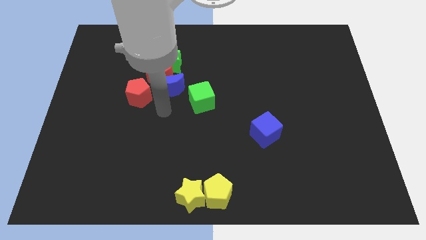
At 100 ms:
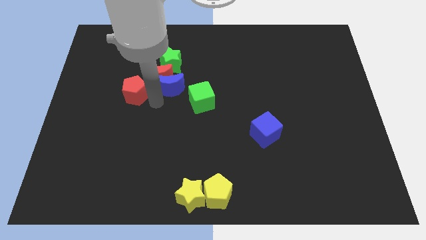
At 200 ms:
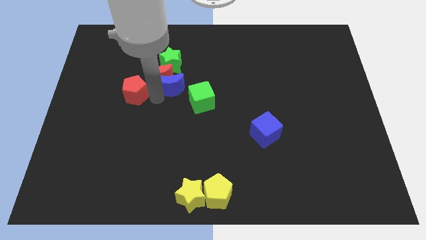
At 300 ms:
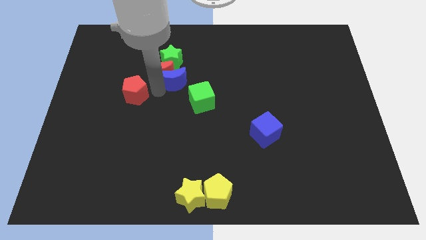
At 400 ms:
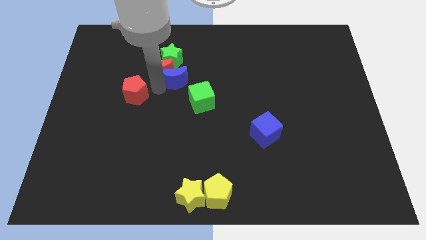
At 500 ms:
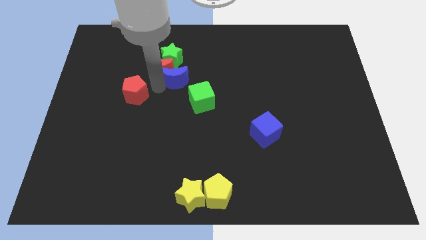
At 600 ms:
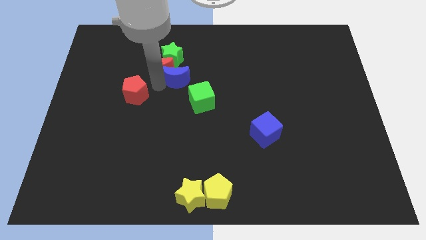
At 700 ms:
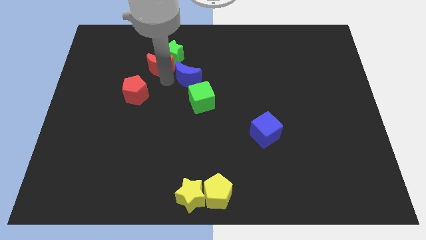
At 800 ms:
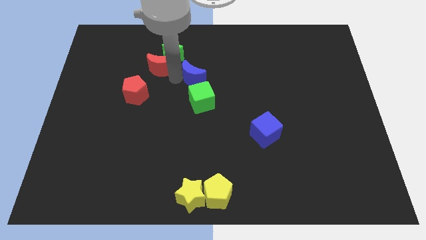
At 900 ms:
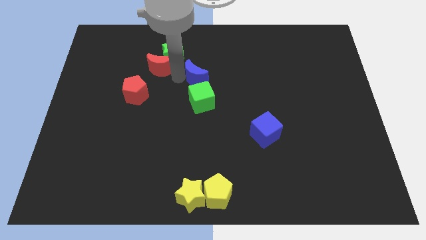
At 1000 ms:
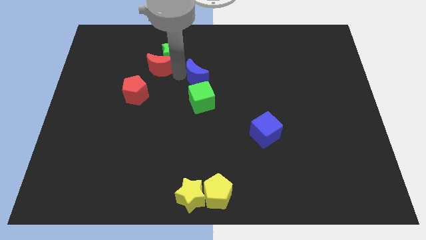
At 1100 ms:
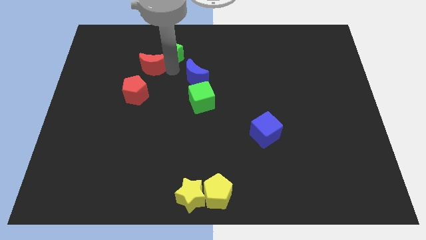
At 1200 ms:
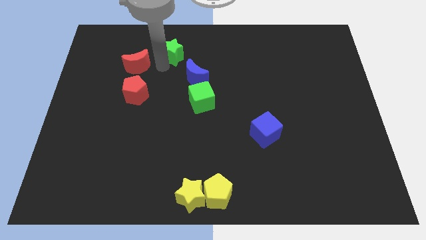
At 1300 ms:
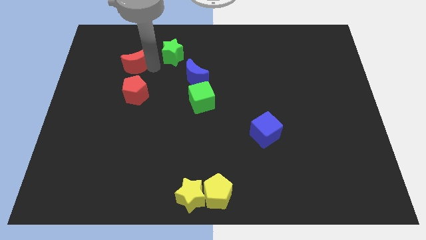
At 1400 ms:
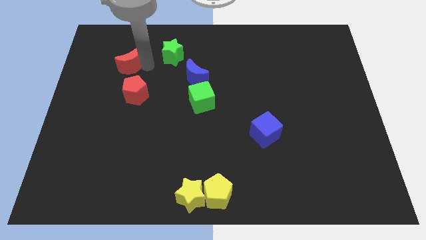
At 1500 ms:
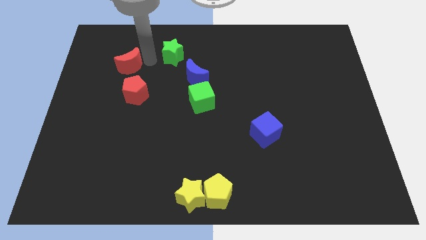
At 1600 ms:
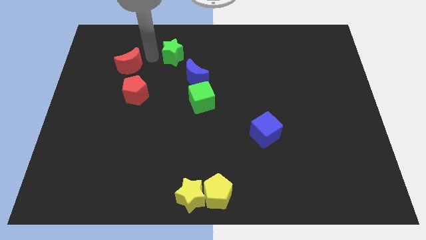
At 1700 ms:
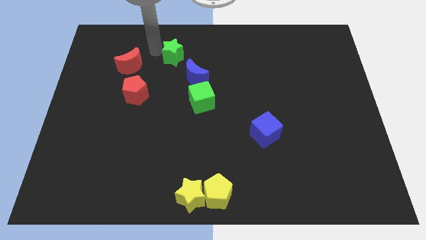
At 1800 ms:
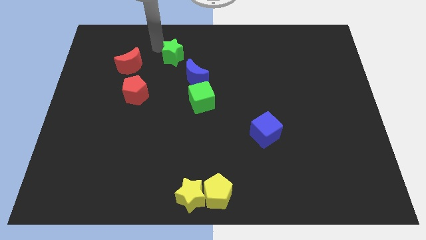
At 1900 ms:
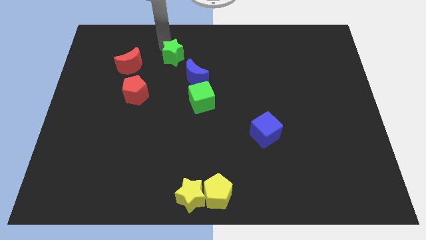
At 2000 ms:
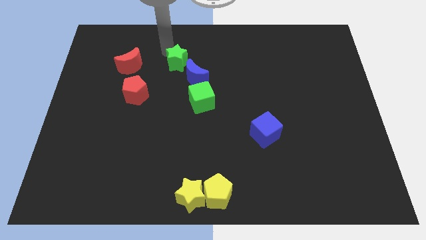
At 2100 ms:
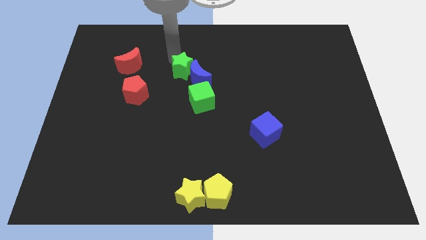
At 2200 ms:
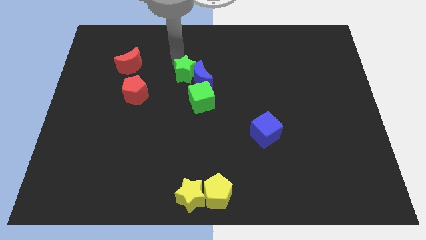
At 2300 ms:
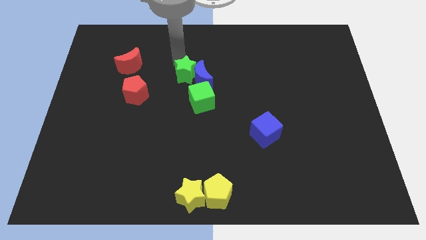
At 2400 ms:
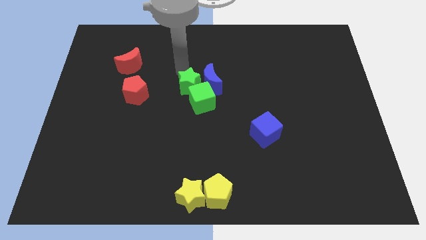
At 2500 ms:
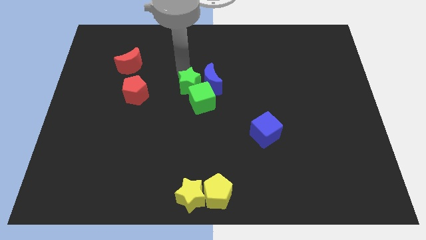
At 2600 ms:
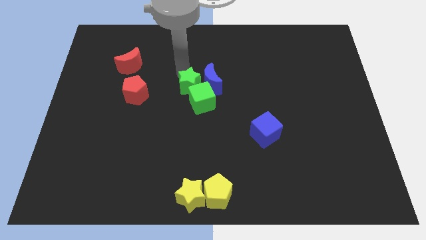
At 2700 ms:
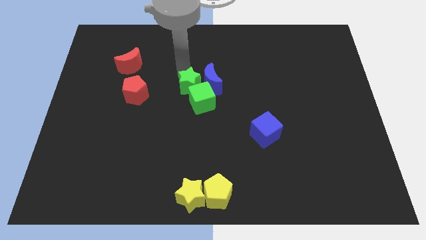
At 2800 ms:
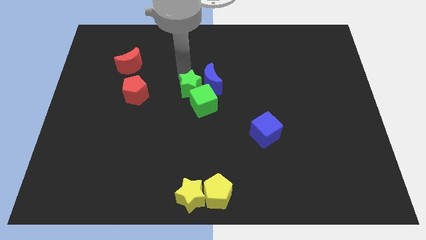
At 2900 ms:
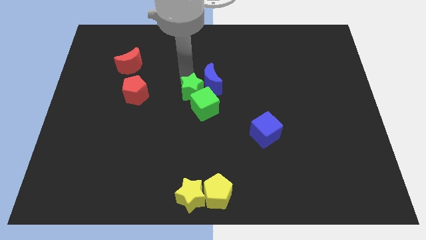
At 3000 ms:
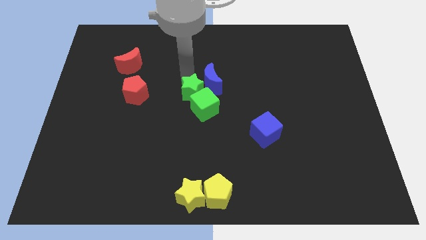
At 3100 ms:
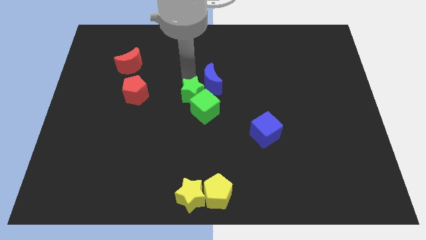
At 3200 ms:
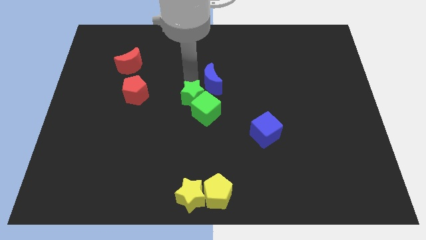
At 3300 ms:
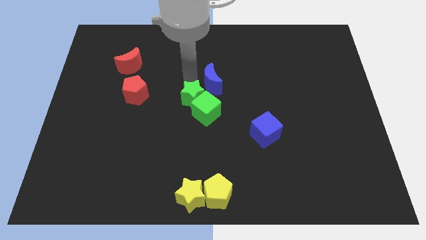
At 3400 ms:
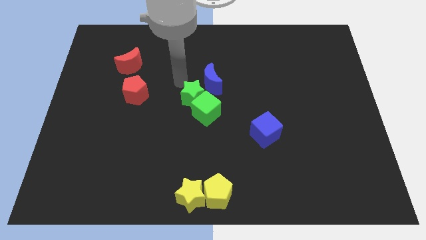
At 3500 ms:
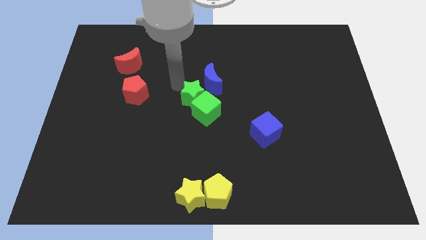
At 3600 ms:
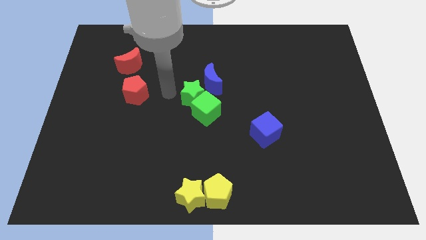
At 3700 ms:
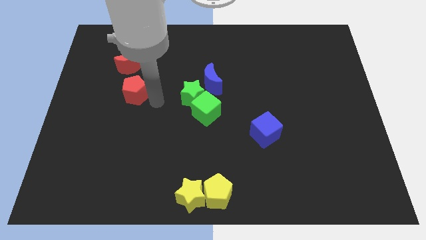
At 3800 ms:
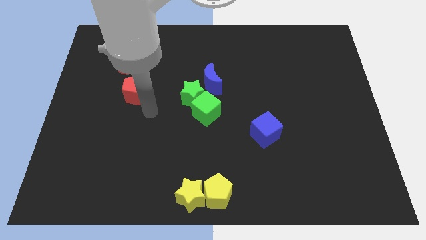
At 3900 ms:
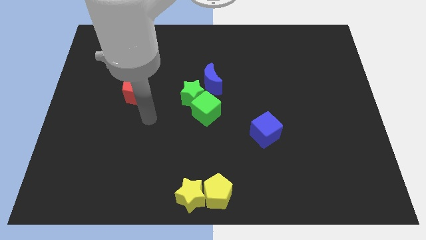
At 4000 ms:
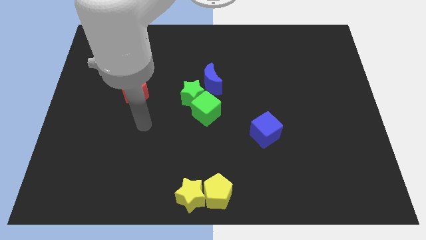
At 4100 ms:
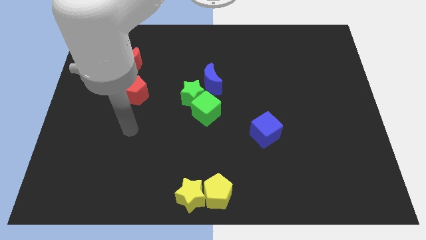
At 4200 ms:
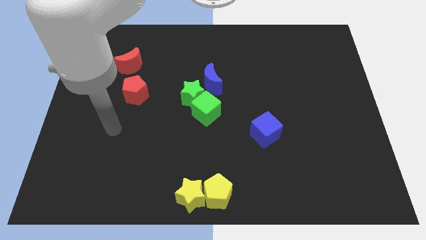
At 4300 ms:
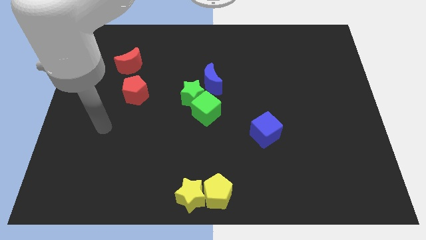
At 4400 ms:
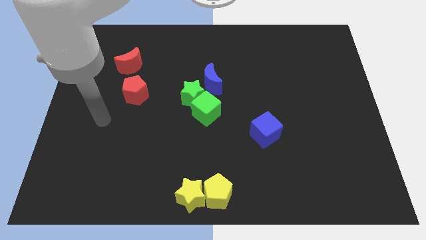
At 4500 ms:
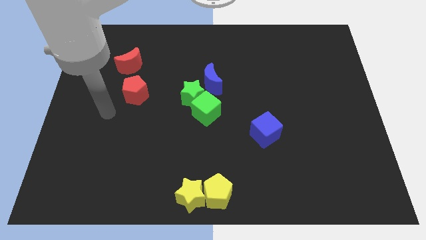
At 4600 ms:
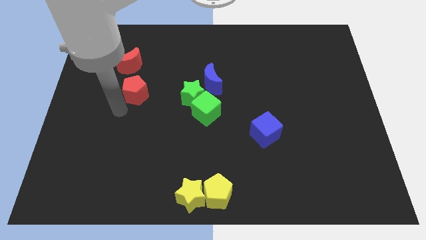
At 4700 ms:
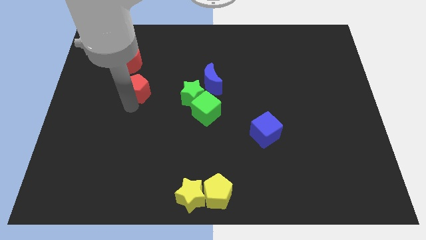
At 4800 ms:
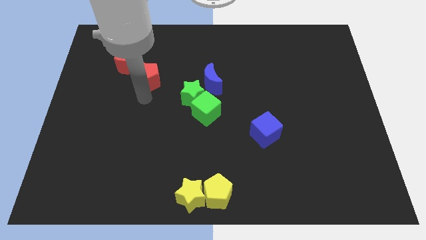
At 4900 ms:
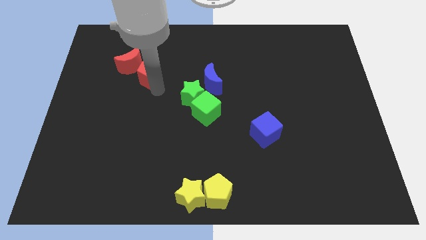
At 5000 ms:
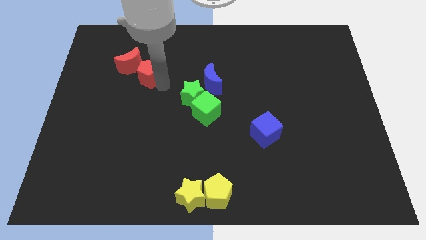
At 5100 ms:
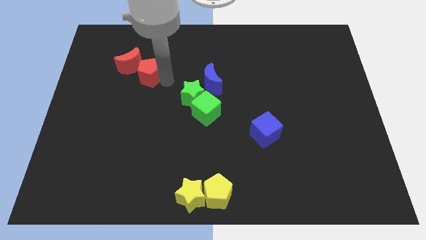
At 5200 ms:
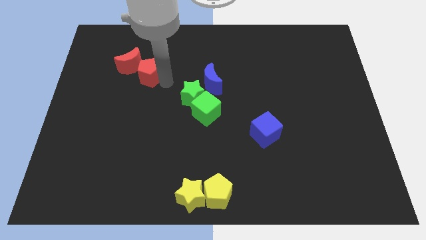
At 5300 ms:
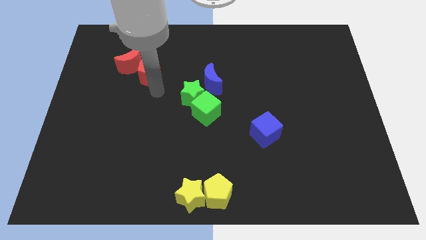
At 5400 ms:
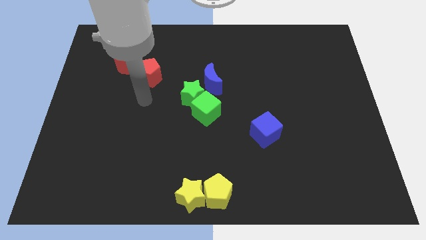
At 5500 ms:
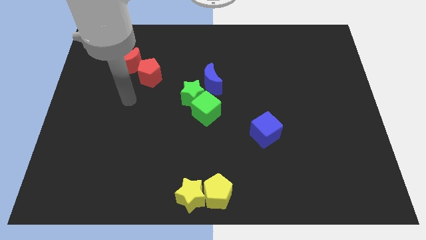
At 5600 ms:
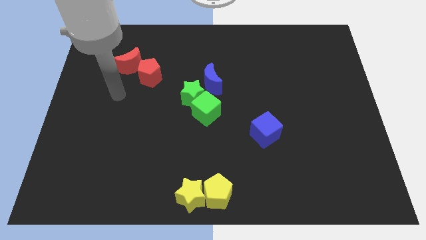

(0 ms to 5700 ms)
separate red moon and blue moon

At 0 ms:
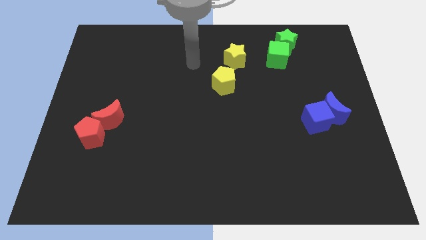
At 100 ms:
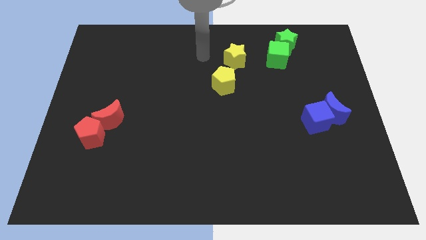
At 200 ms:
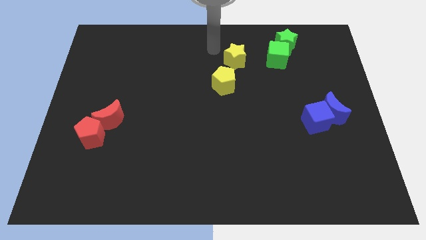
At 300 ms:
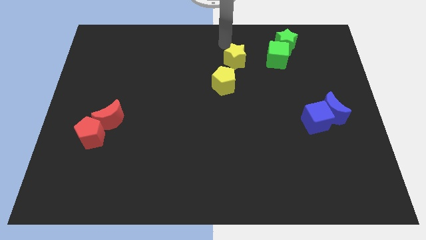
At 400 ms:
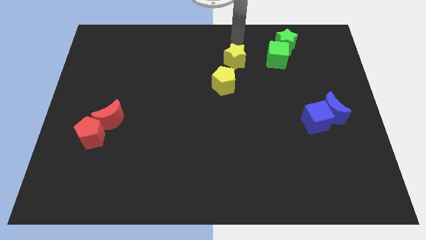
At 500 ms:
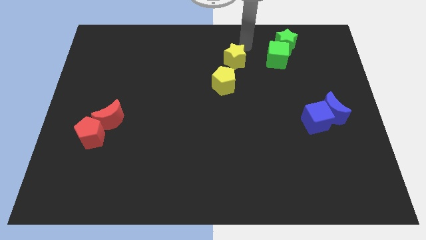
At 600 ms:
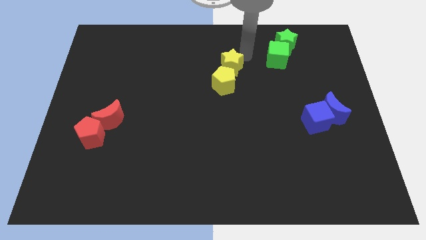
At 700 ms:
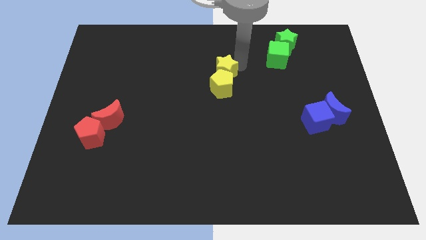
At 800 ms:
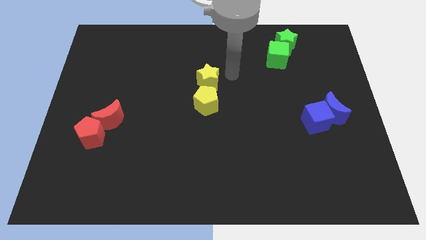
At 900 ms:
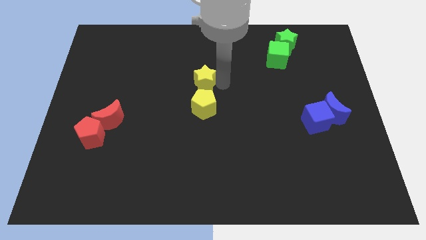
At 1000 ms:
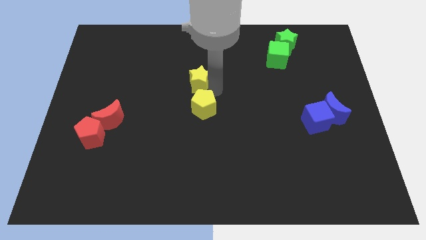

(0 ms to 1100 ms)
push the yellow star into the yellow pentagon

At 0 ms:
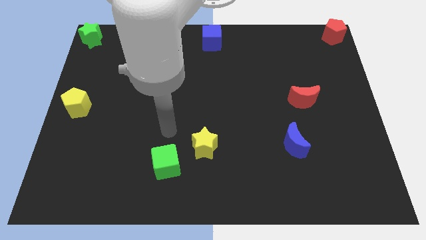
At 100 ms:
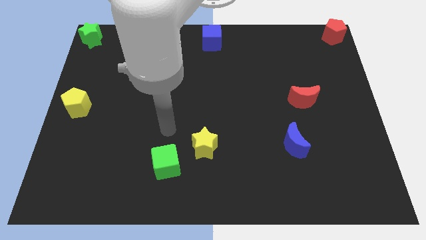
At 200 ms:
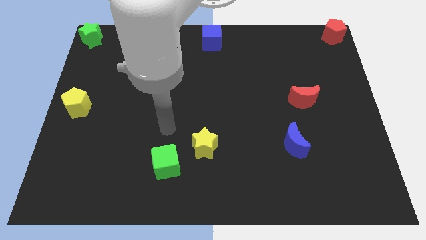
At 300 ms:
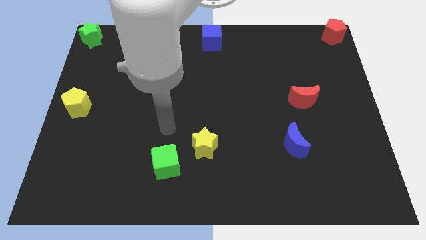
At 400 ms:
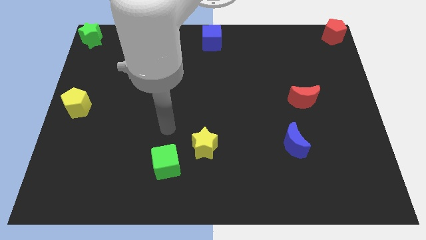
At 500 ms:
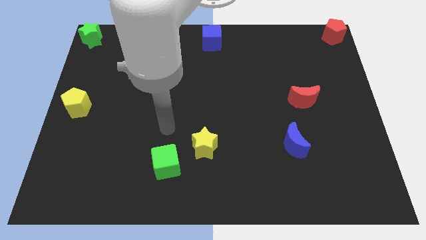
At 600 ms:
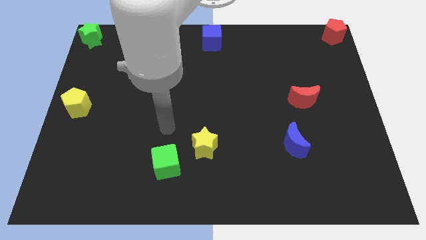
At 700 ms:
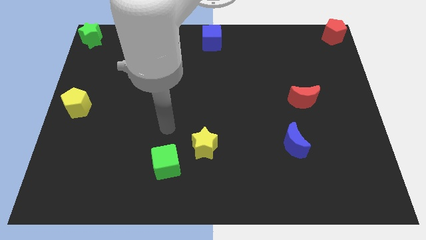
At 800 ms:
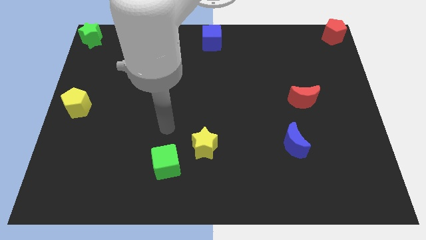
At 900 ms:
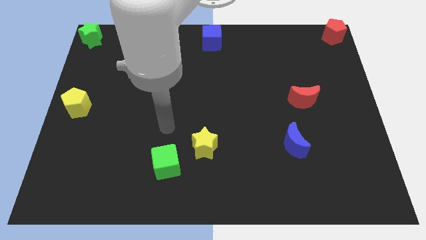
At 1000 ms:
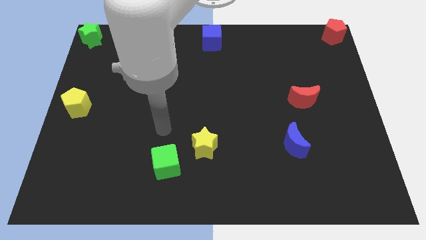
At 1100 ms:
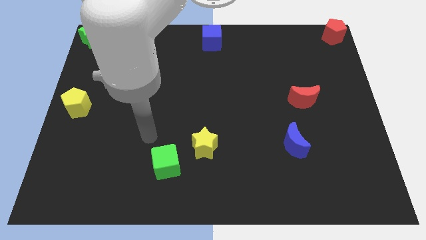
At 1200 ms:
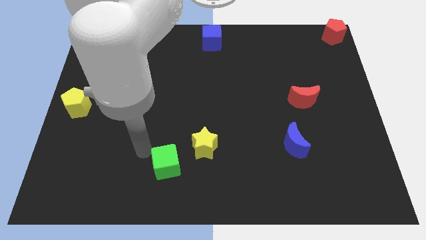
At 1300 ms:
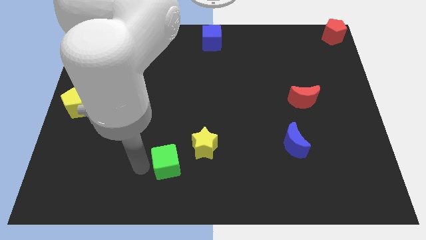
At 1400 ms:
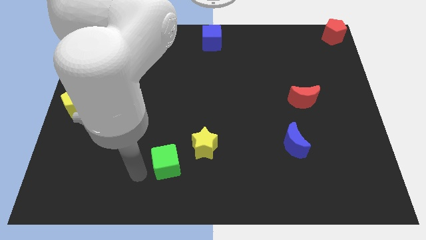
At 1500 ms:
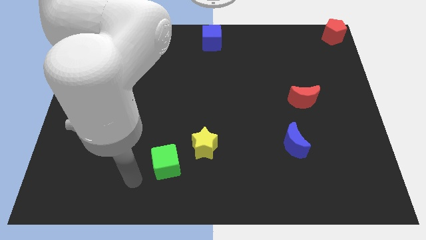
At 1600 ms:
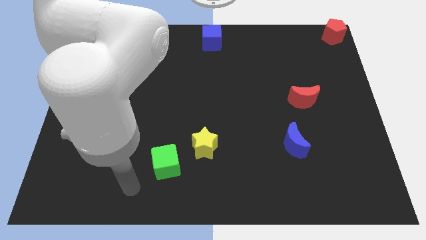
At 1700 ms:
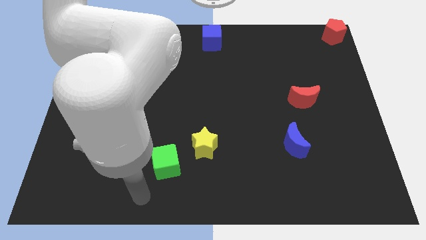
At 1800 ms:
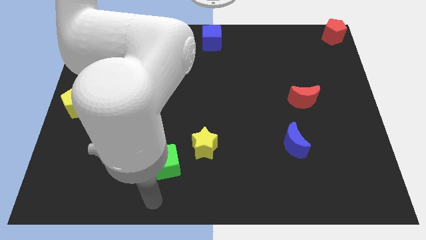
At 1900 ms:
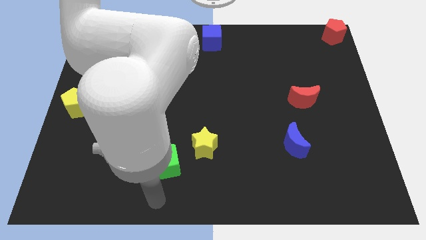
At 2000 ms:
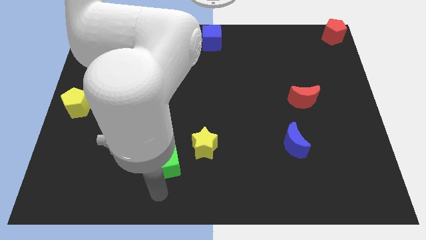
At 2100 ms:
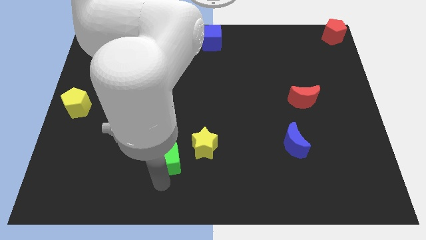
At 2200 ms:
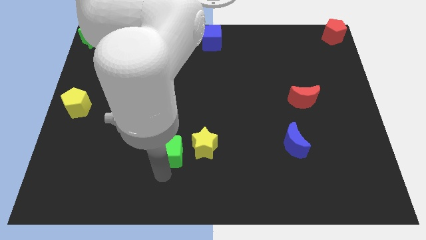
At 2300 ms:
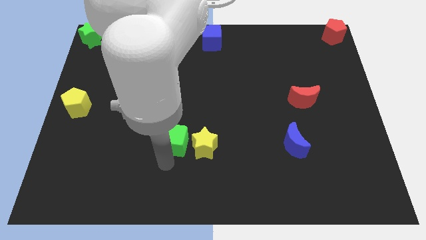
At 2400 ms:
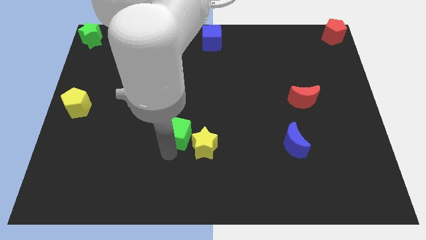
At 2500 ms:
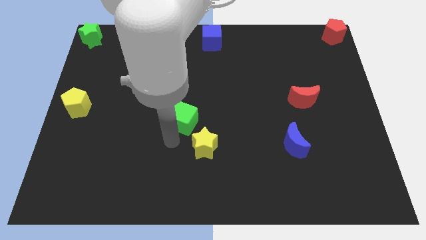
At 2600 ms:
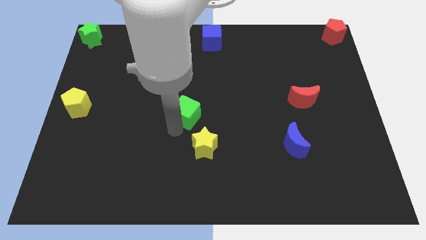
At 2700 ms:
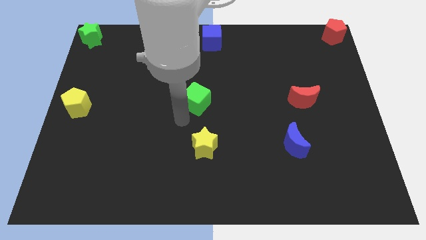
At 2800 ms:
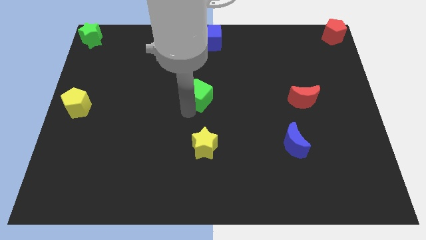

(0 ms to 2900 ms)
move the green cube above the yellow star
